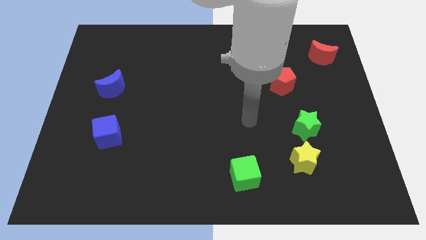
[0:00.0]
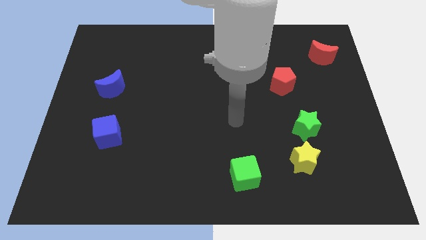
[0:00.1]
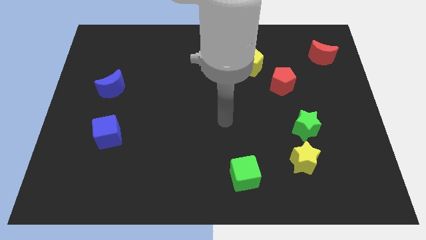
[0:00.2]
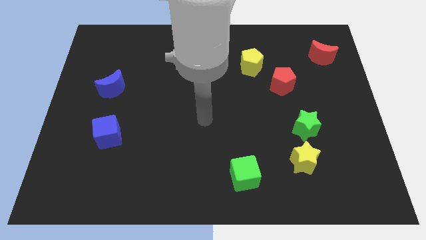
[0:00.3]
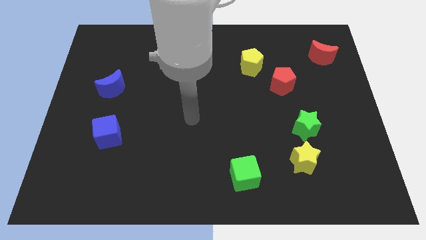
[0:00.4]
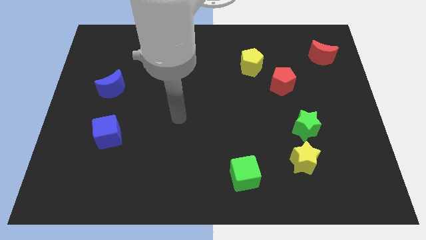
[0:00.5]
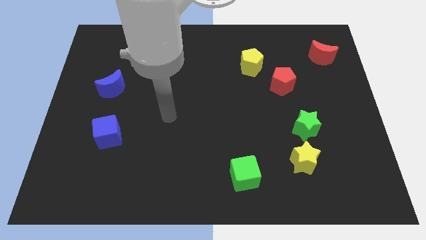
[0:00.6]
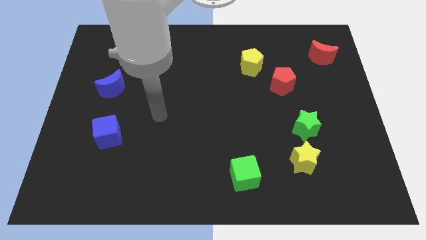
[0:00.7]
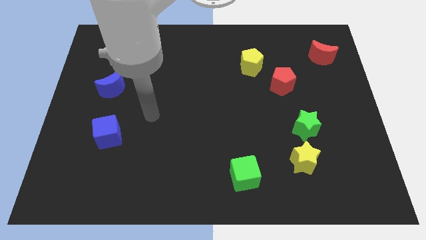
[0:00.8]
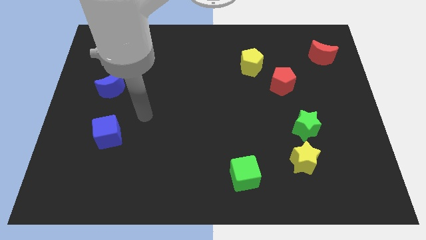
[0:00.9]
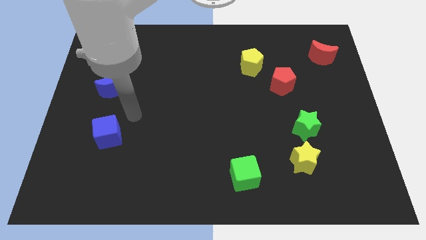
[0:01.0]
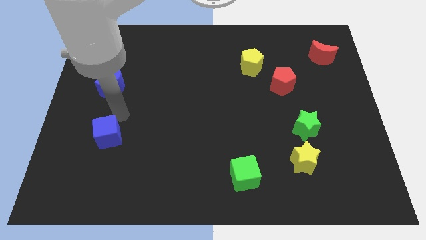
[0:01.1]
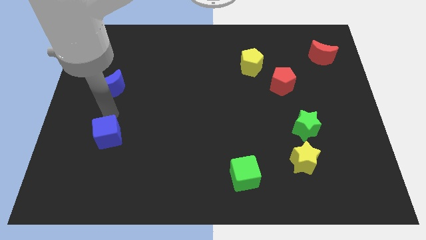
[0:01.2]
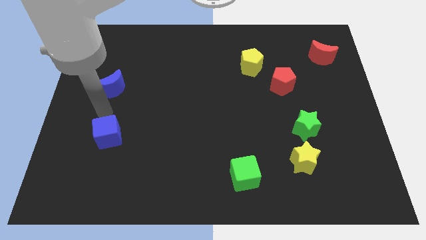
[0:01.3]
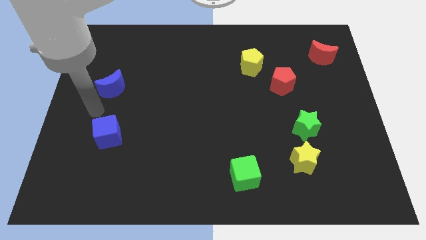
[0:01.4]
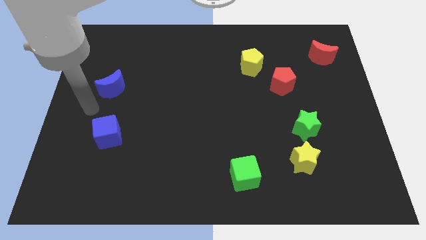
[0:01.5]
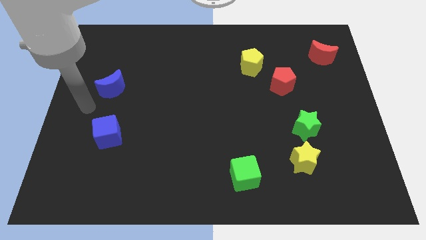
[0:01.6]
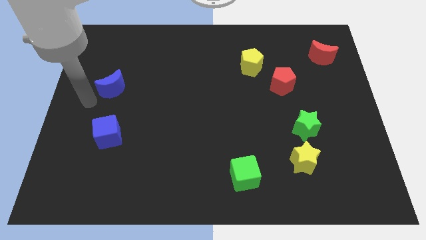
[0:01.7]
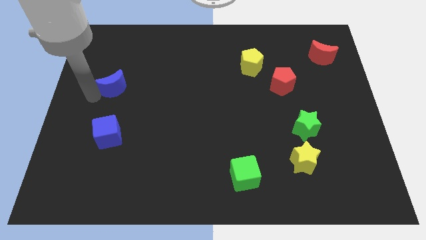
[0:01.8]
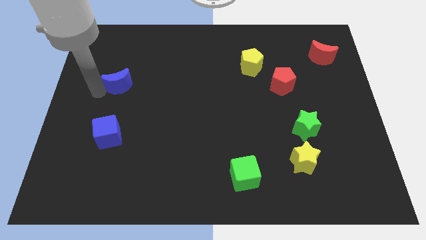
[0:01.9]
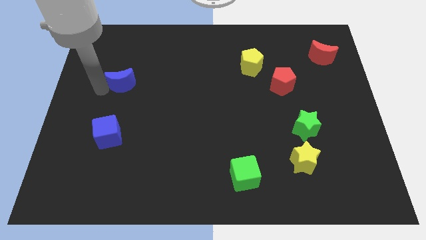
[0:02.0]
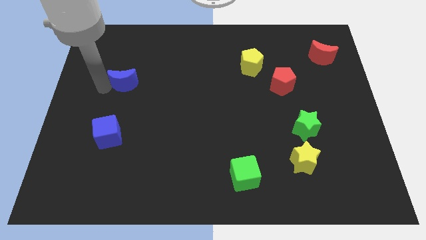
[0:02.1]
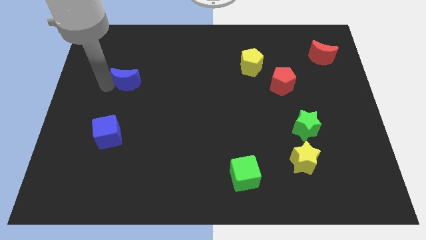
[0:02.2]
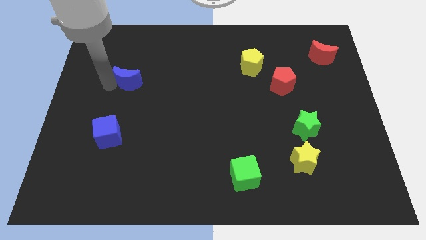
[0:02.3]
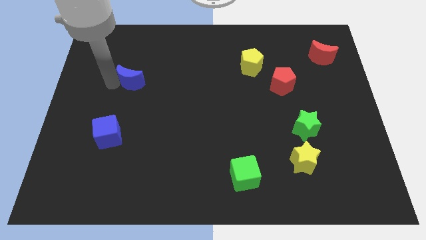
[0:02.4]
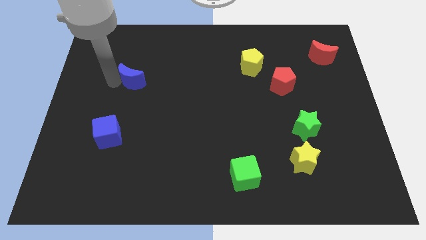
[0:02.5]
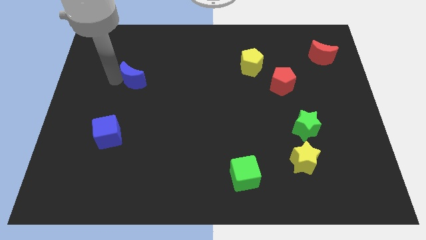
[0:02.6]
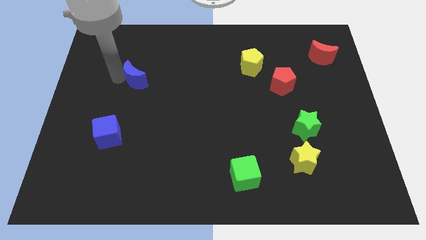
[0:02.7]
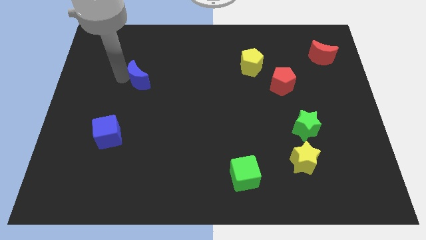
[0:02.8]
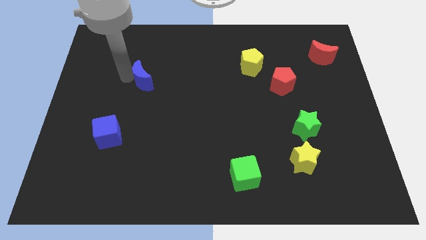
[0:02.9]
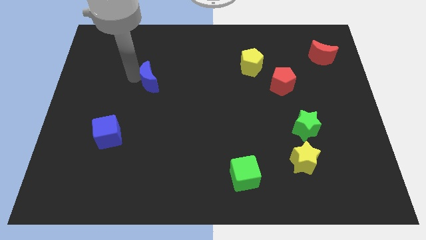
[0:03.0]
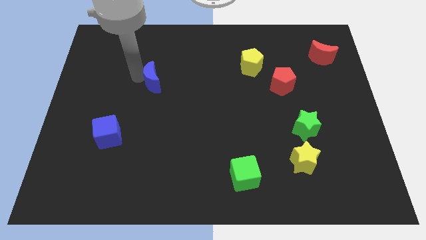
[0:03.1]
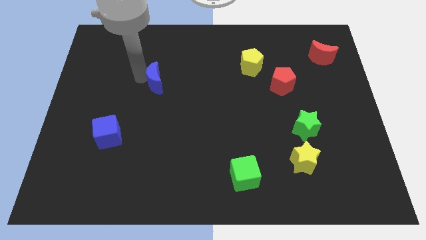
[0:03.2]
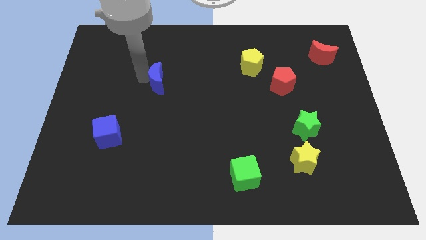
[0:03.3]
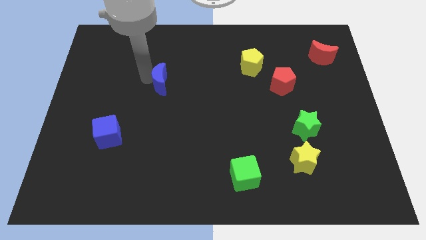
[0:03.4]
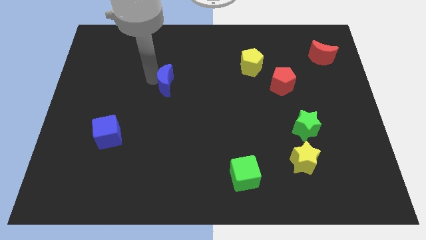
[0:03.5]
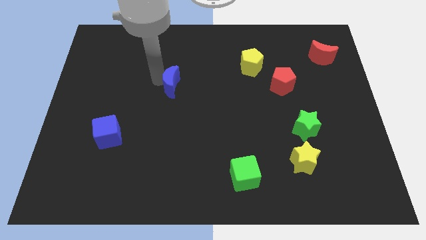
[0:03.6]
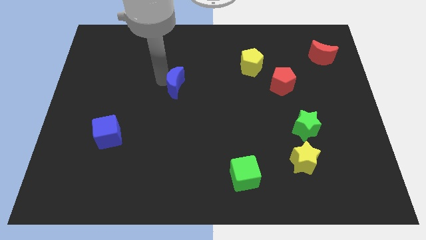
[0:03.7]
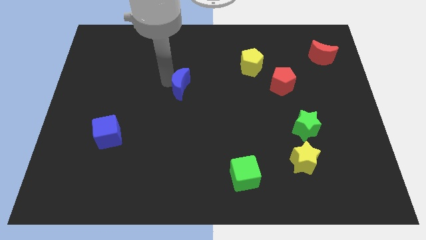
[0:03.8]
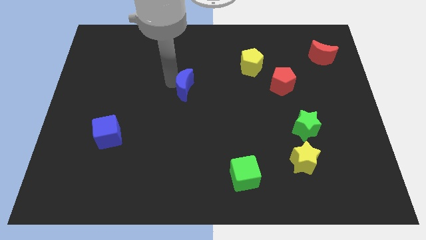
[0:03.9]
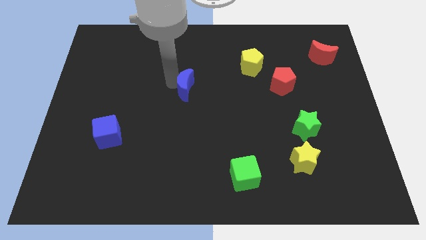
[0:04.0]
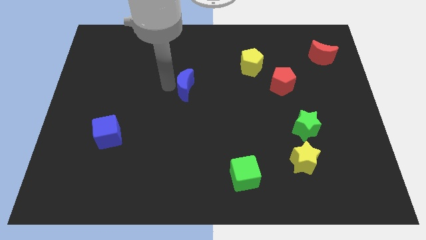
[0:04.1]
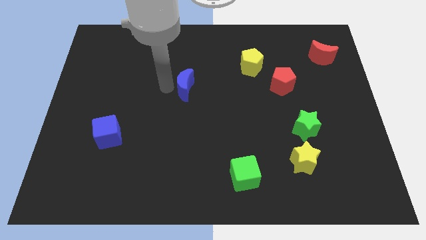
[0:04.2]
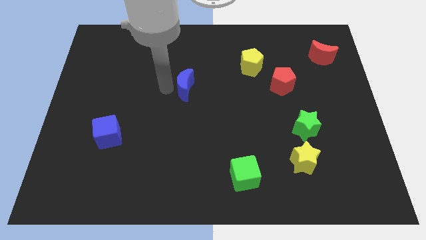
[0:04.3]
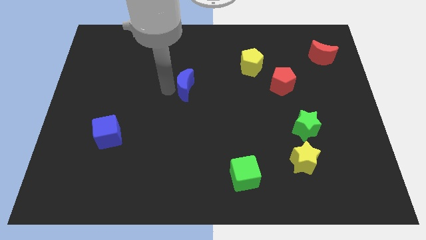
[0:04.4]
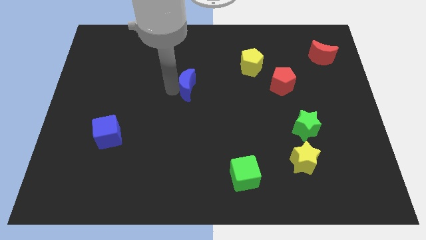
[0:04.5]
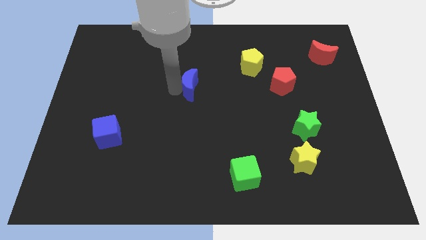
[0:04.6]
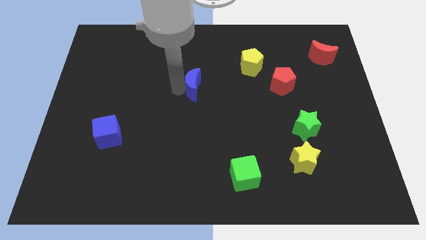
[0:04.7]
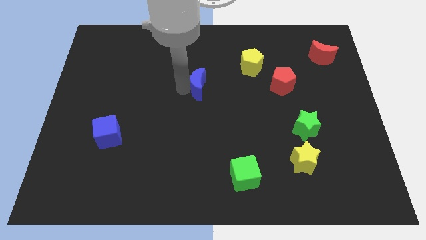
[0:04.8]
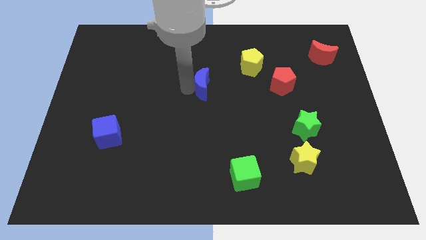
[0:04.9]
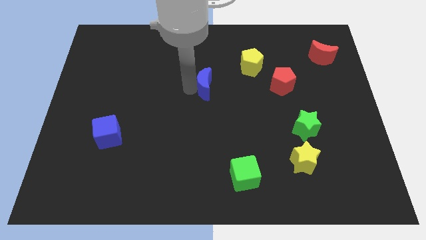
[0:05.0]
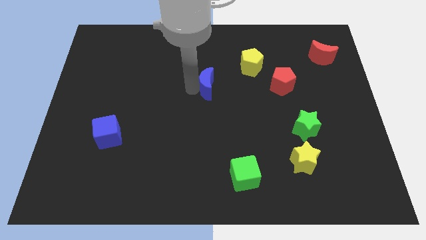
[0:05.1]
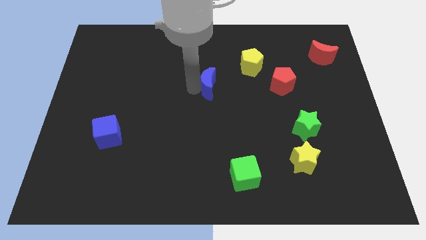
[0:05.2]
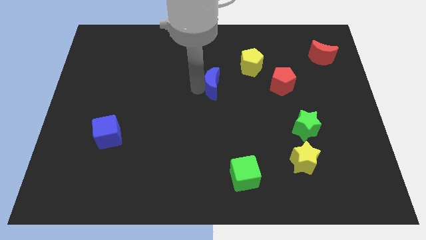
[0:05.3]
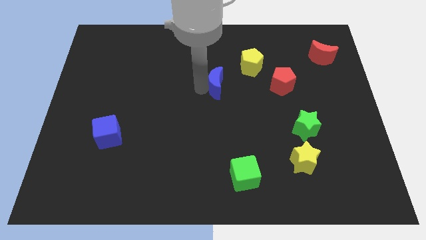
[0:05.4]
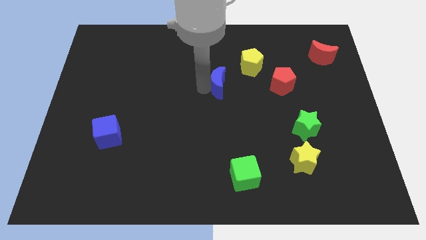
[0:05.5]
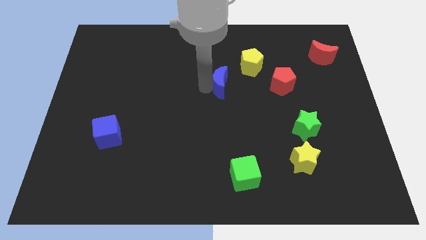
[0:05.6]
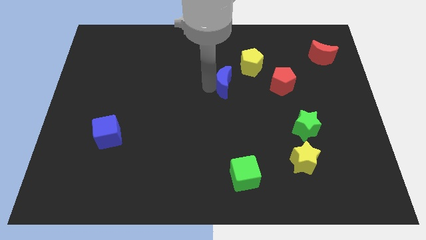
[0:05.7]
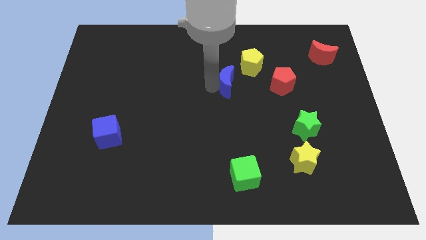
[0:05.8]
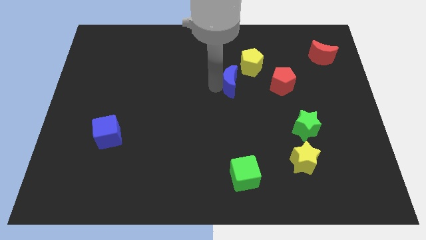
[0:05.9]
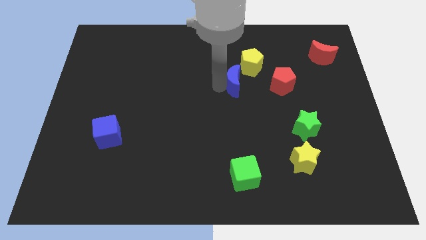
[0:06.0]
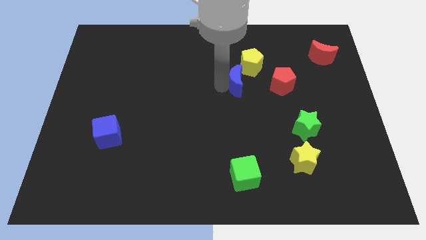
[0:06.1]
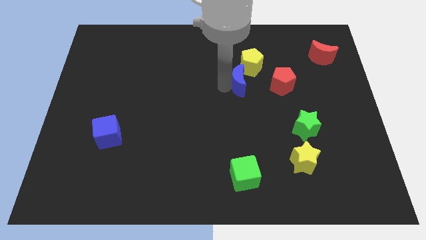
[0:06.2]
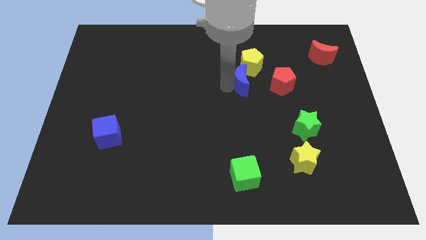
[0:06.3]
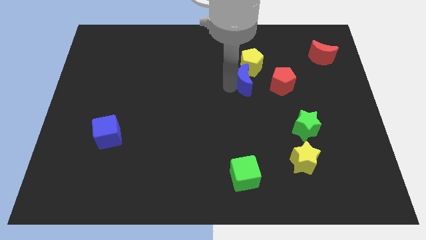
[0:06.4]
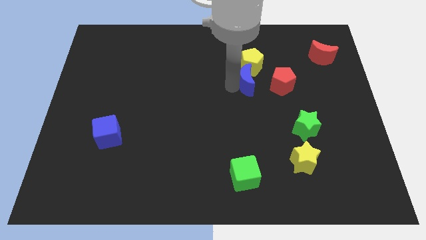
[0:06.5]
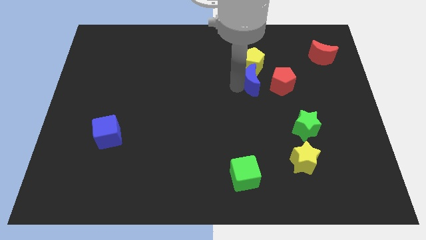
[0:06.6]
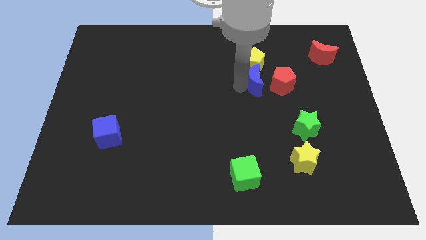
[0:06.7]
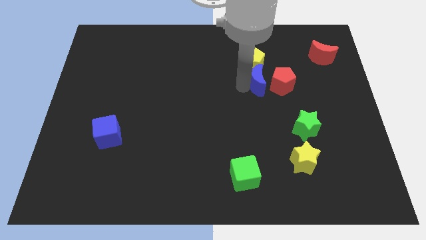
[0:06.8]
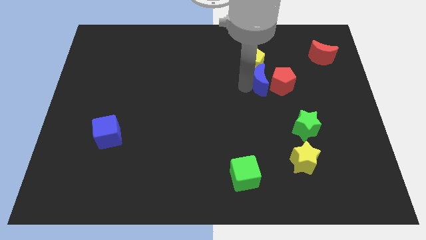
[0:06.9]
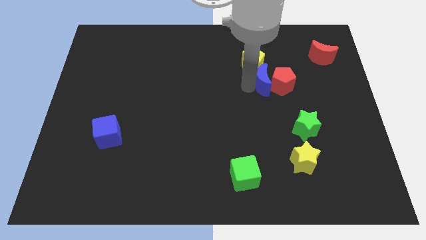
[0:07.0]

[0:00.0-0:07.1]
push the blue moon to the red pentagon

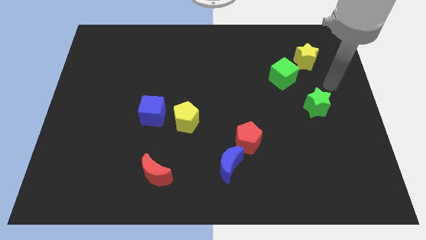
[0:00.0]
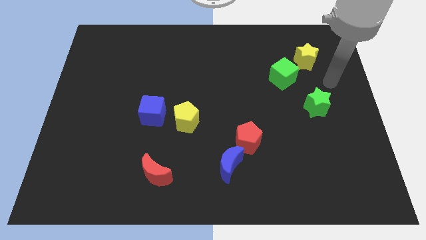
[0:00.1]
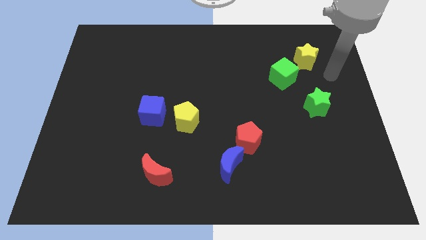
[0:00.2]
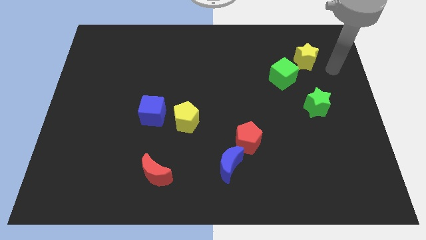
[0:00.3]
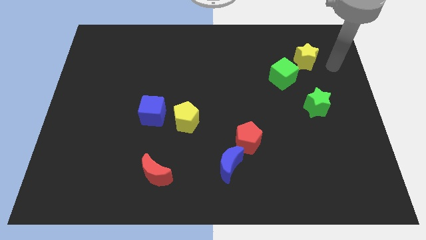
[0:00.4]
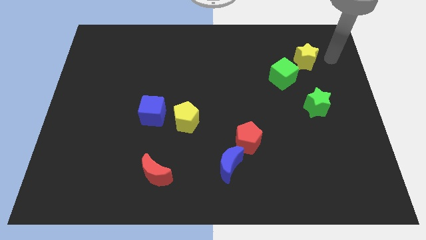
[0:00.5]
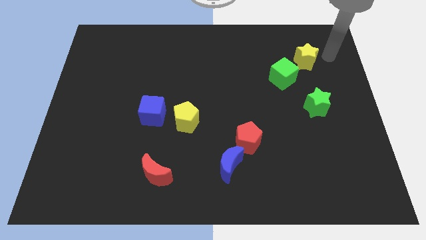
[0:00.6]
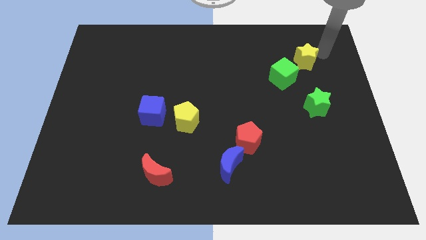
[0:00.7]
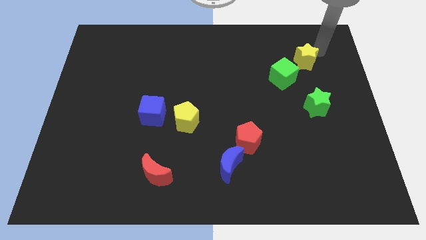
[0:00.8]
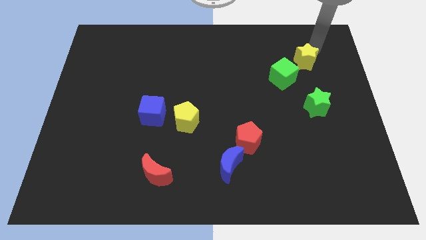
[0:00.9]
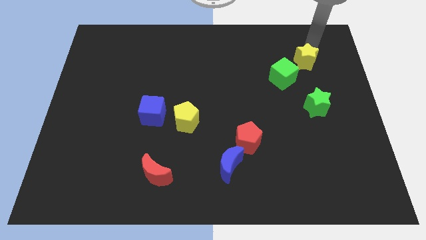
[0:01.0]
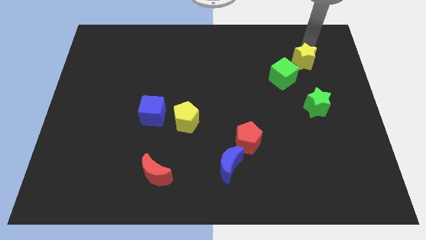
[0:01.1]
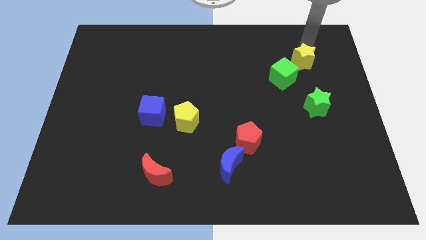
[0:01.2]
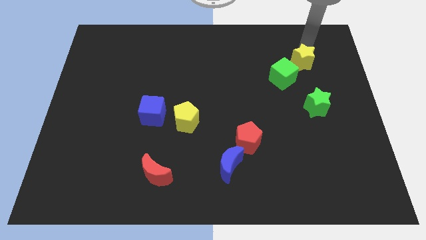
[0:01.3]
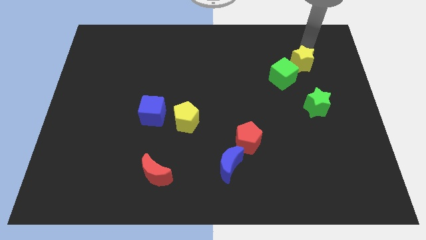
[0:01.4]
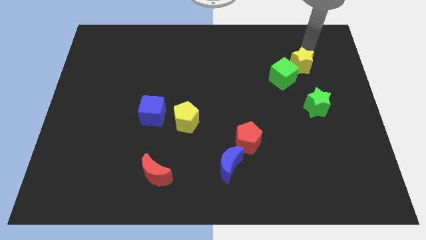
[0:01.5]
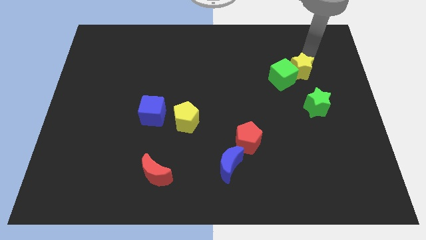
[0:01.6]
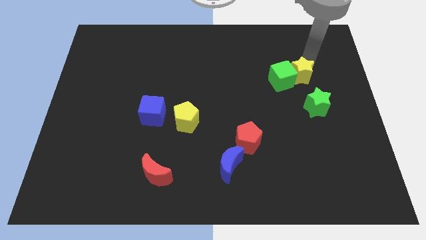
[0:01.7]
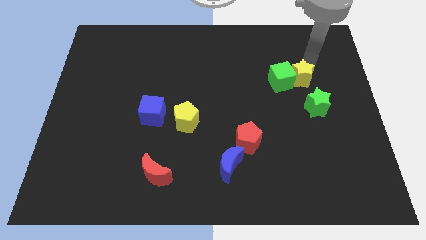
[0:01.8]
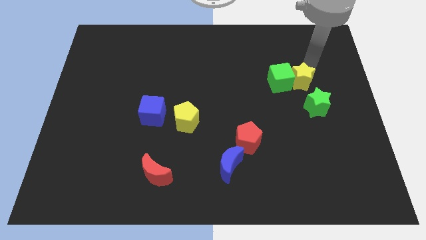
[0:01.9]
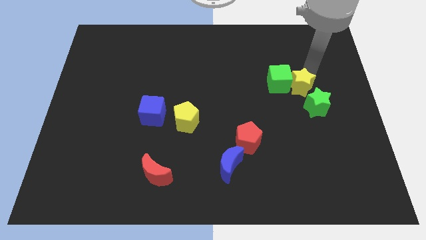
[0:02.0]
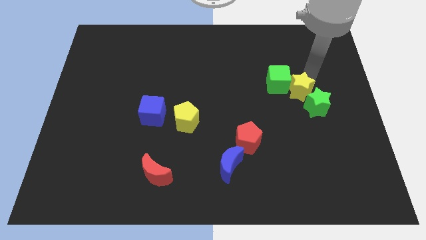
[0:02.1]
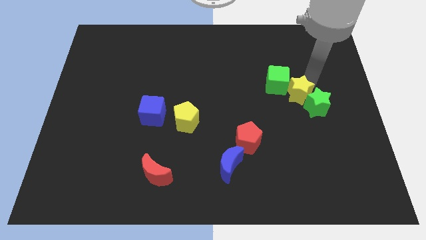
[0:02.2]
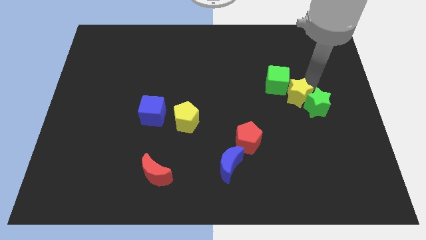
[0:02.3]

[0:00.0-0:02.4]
push the yellow star towards the green star
